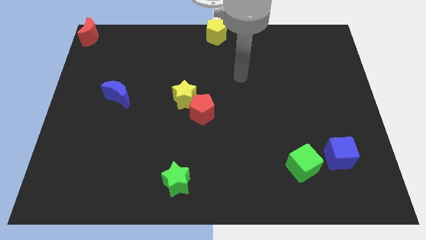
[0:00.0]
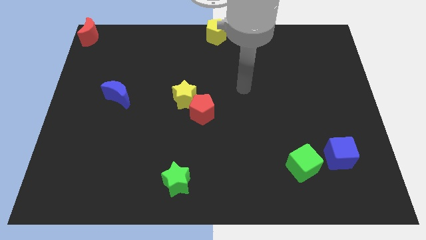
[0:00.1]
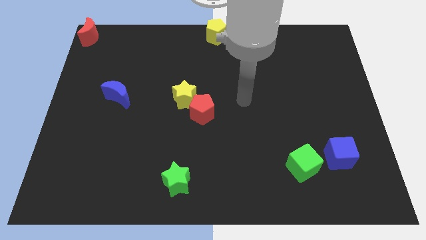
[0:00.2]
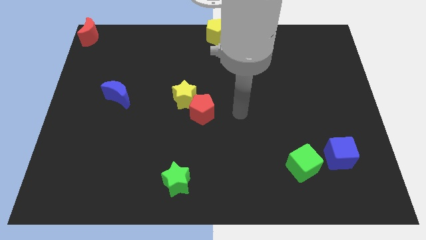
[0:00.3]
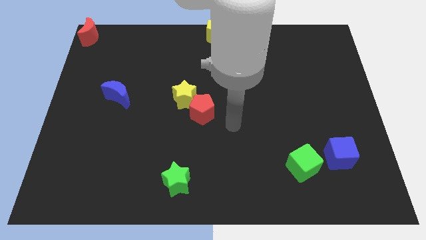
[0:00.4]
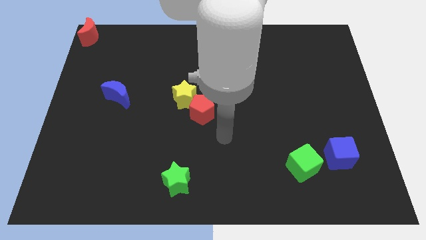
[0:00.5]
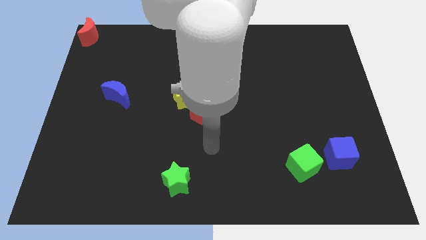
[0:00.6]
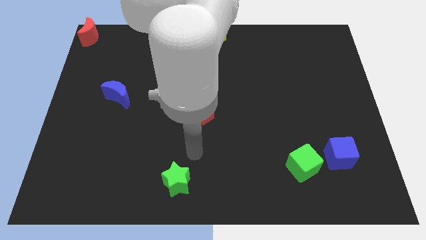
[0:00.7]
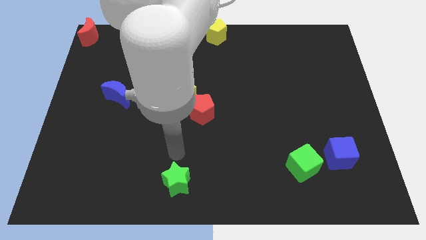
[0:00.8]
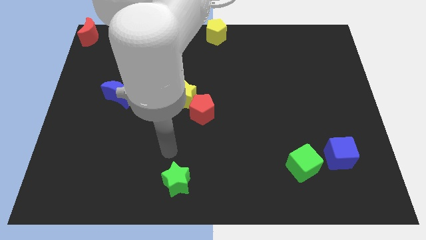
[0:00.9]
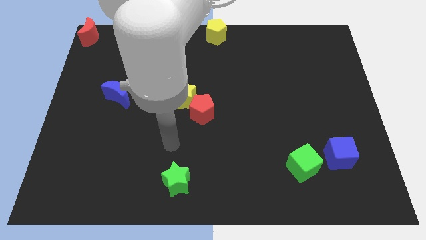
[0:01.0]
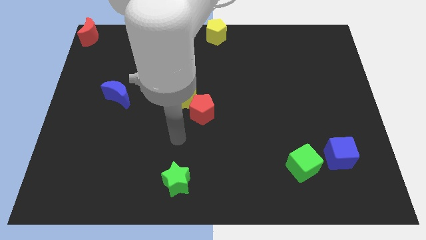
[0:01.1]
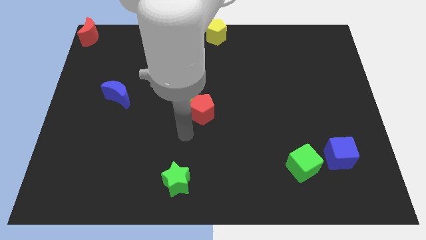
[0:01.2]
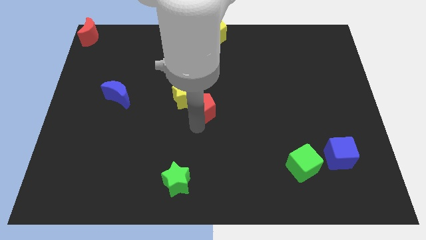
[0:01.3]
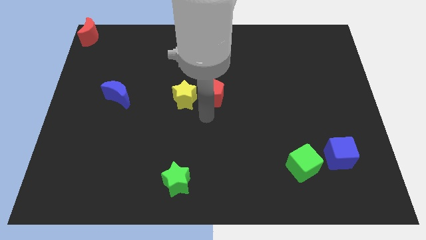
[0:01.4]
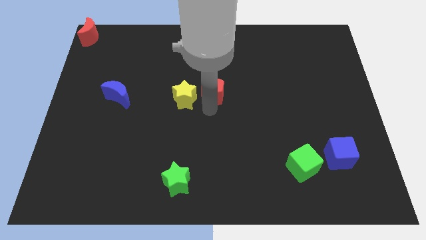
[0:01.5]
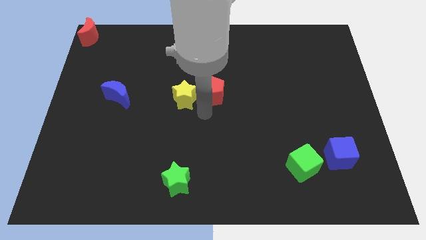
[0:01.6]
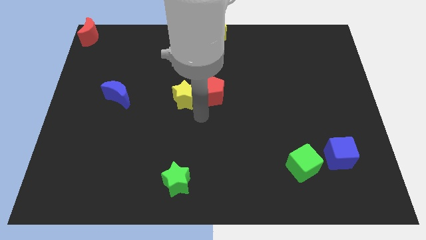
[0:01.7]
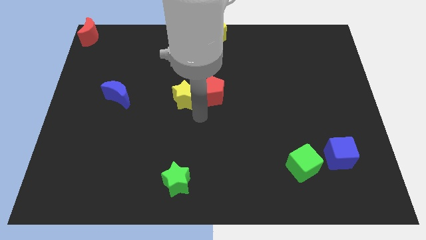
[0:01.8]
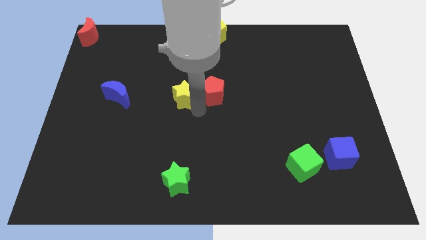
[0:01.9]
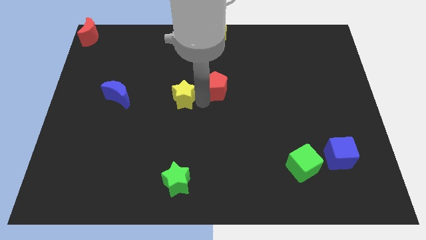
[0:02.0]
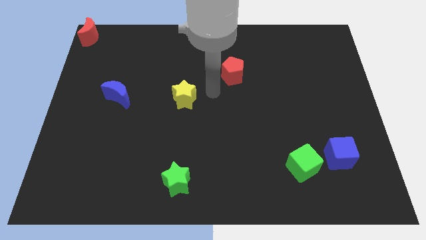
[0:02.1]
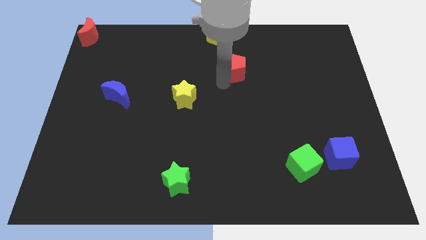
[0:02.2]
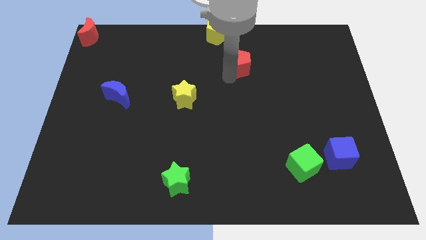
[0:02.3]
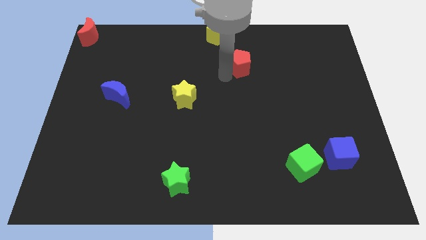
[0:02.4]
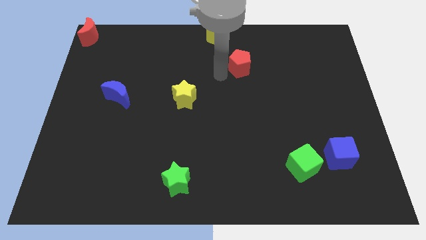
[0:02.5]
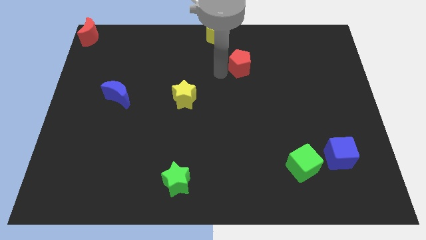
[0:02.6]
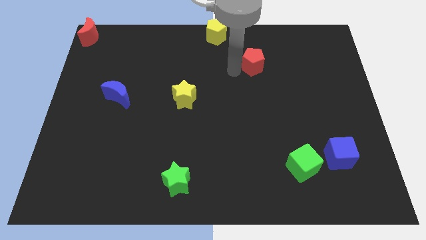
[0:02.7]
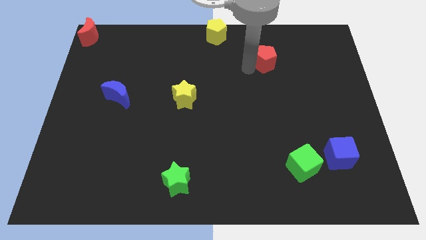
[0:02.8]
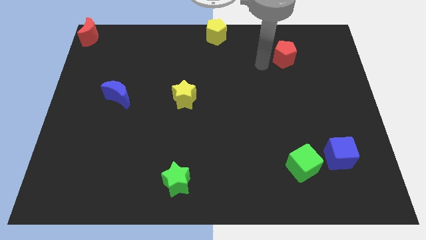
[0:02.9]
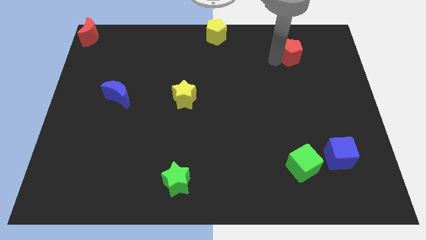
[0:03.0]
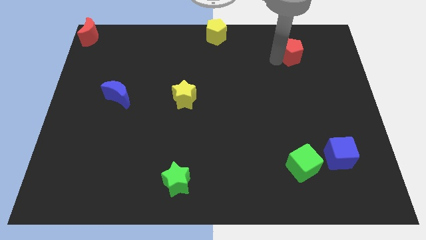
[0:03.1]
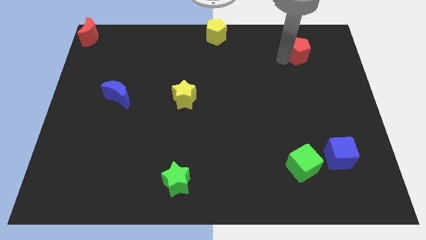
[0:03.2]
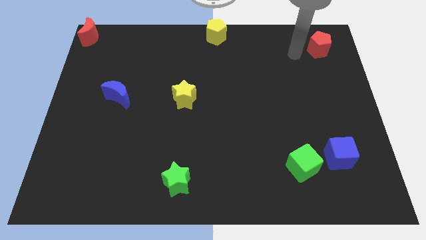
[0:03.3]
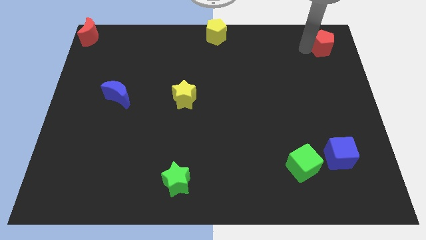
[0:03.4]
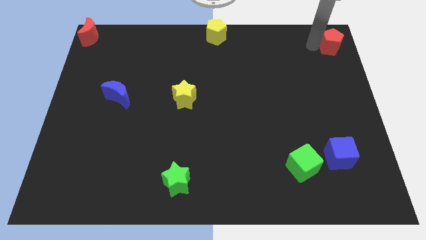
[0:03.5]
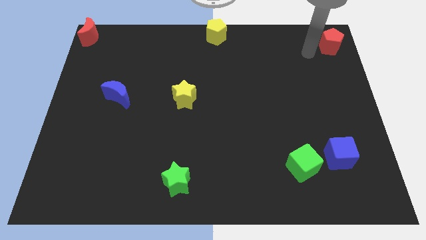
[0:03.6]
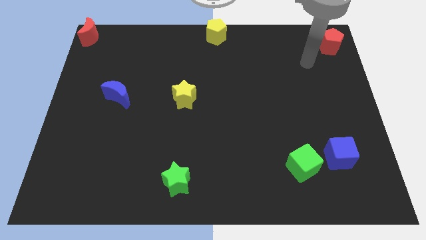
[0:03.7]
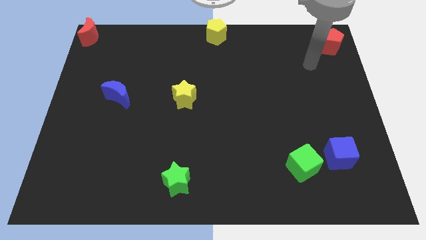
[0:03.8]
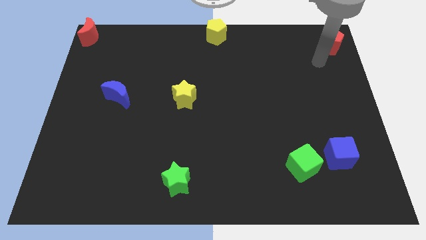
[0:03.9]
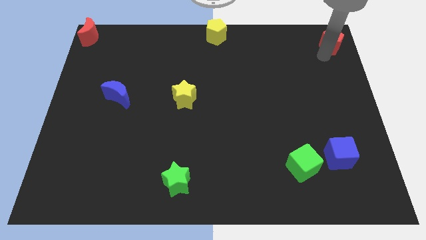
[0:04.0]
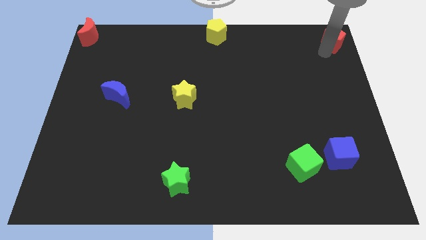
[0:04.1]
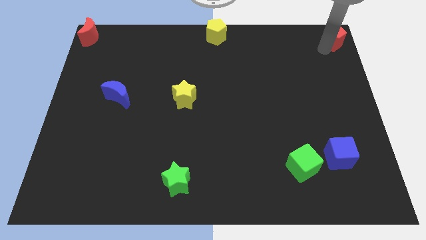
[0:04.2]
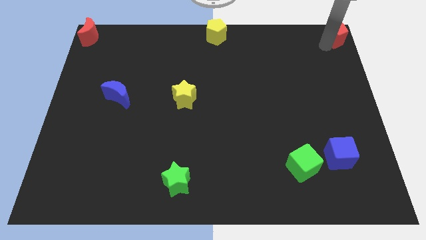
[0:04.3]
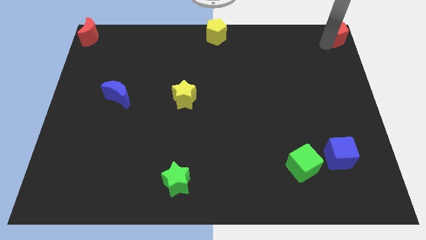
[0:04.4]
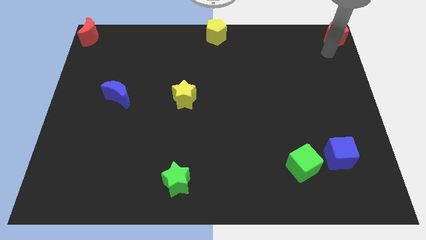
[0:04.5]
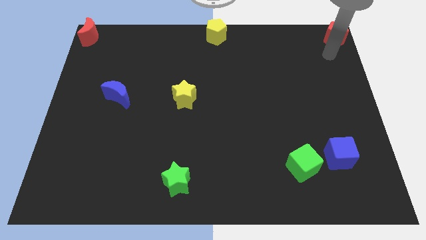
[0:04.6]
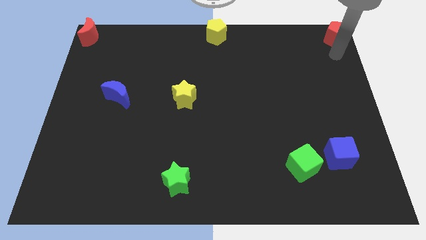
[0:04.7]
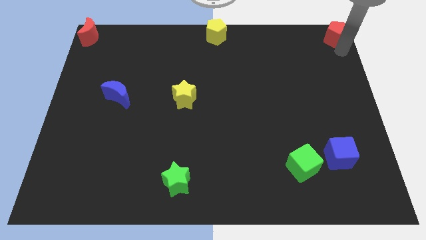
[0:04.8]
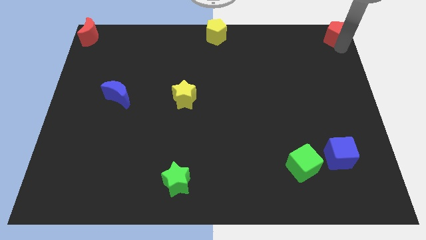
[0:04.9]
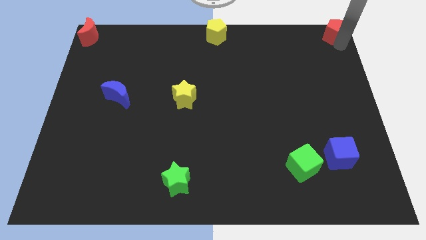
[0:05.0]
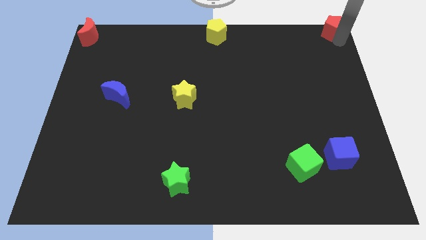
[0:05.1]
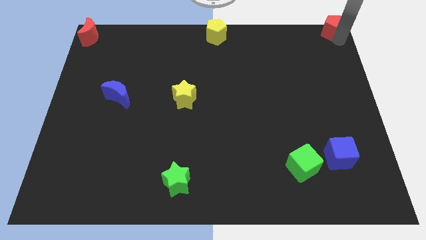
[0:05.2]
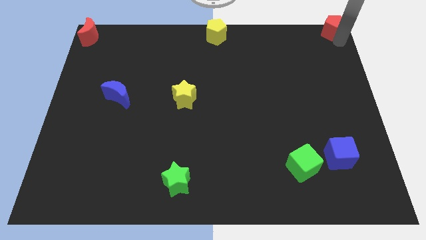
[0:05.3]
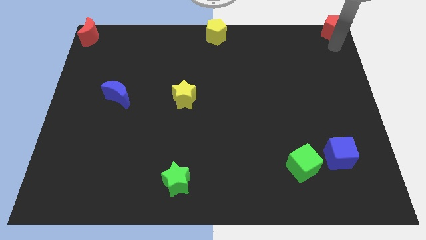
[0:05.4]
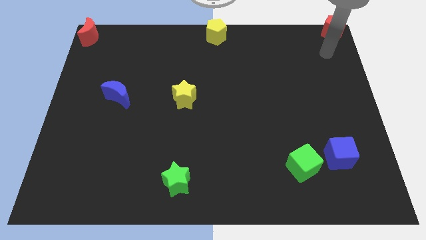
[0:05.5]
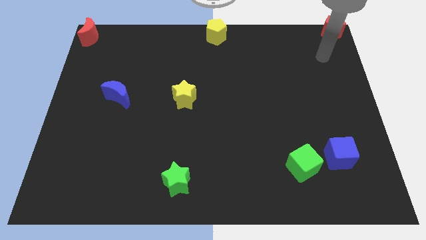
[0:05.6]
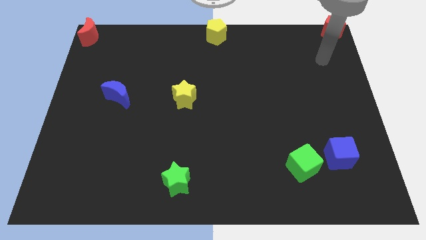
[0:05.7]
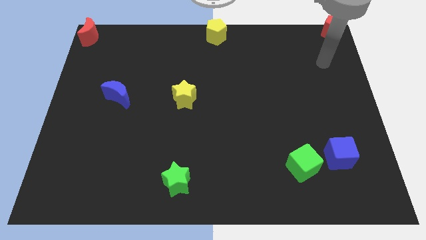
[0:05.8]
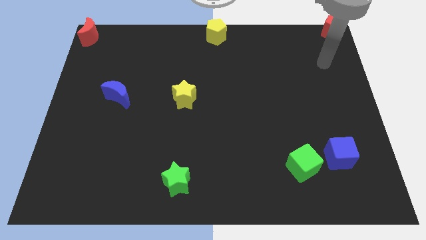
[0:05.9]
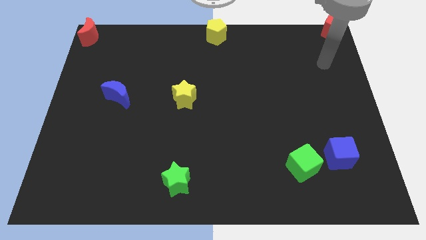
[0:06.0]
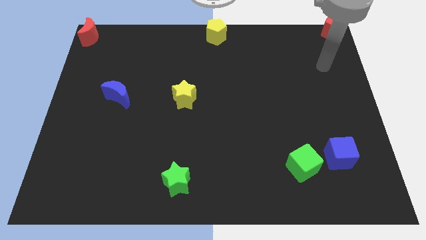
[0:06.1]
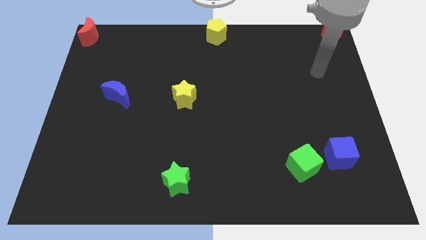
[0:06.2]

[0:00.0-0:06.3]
push red pentagon to the top right corner of the board

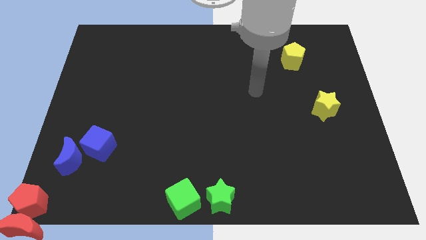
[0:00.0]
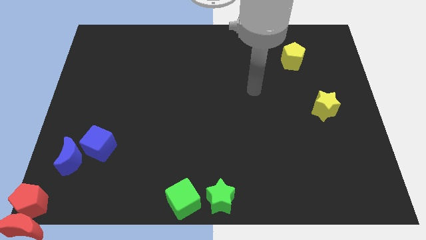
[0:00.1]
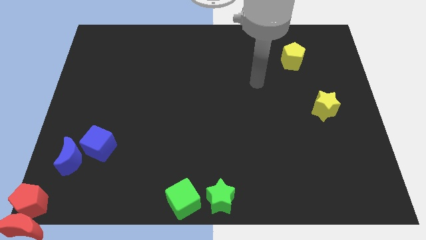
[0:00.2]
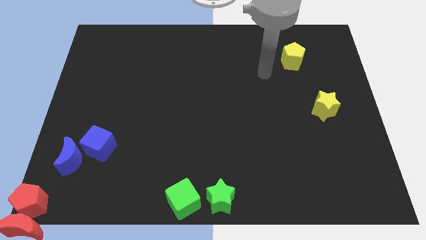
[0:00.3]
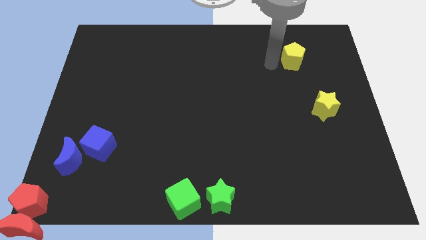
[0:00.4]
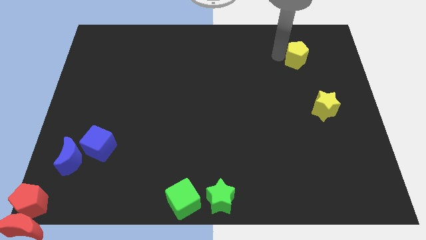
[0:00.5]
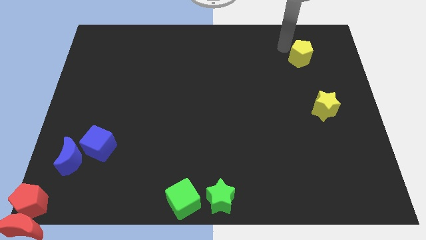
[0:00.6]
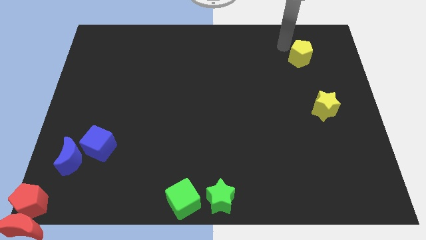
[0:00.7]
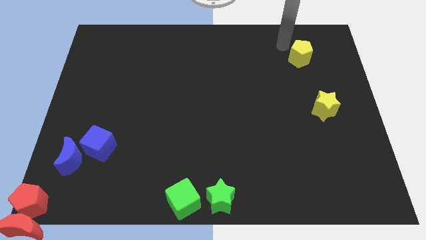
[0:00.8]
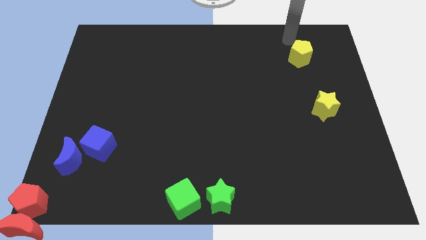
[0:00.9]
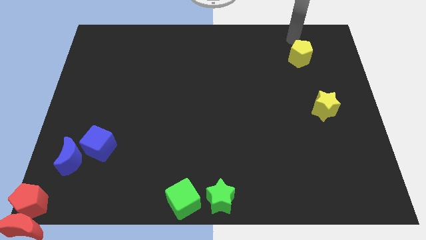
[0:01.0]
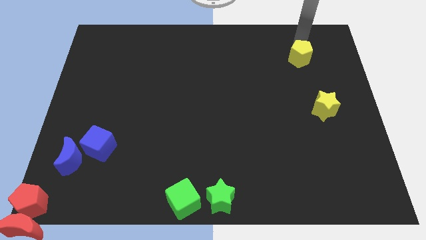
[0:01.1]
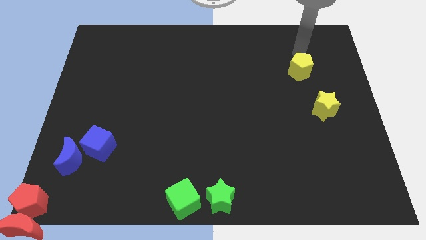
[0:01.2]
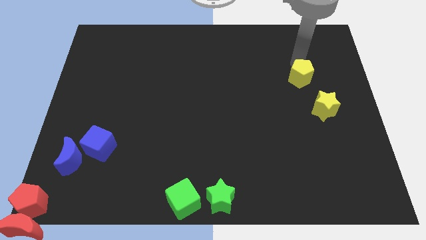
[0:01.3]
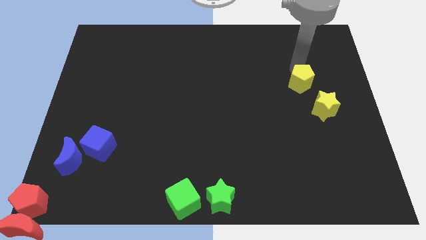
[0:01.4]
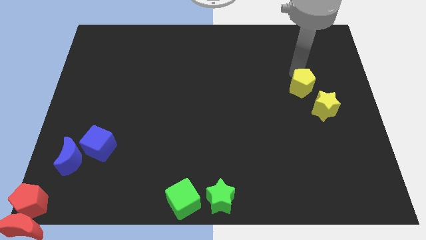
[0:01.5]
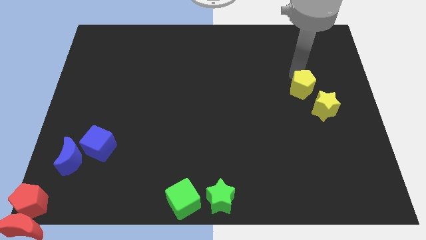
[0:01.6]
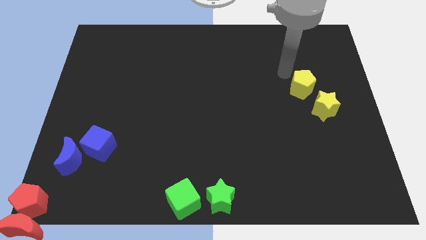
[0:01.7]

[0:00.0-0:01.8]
move the yellow pentagon to the top left side of the yellow star

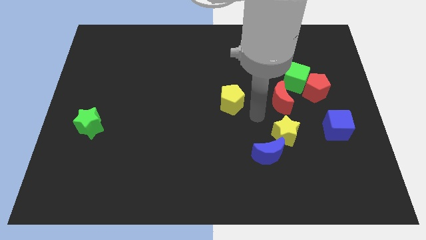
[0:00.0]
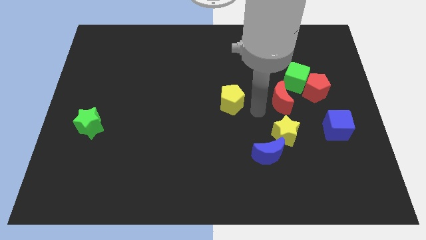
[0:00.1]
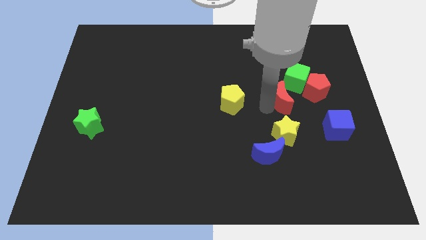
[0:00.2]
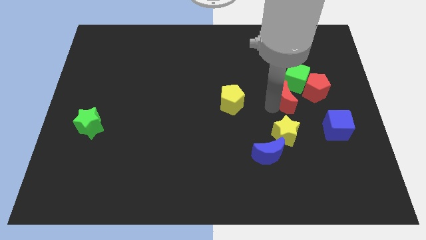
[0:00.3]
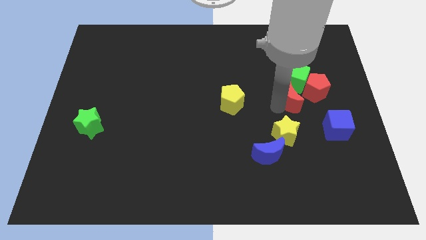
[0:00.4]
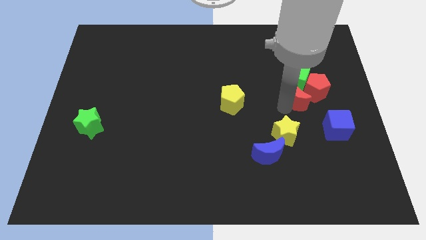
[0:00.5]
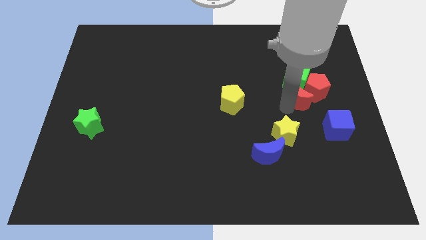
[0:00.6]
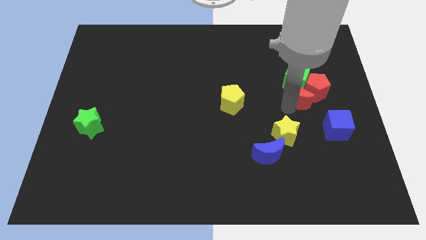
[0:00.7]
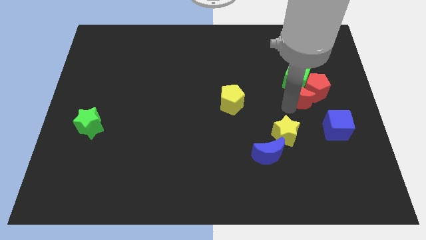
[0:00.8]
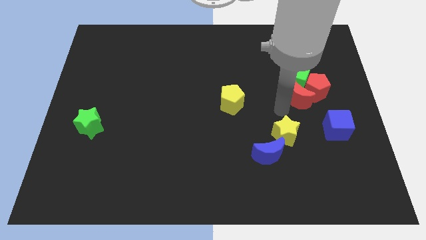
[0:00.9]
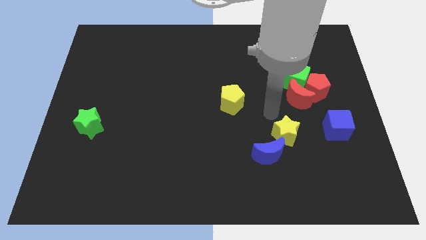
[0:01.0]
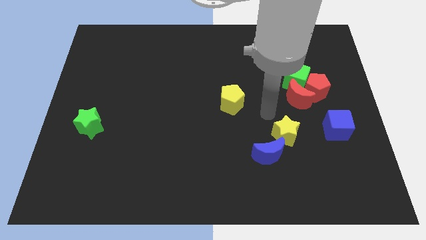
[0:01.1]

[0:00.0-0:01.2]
move the red crescent to the bottom right of the green cube
